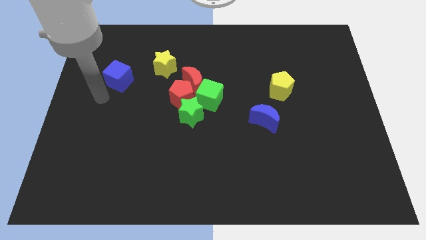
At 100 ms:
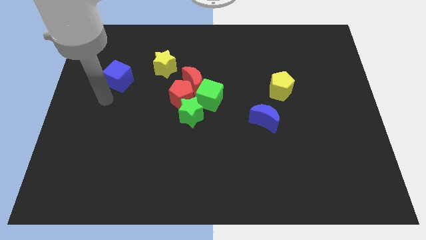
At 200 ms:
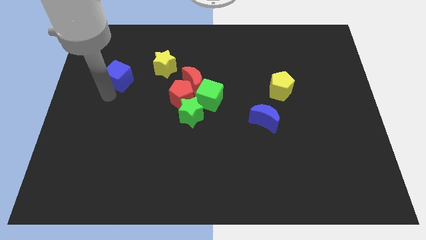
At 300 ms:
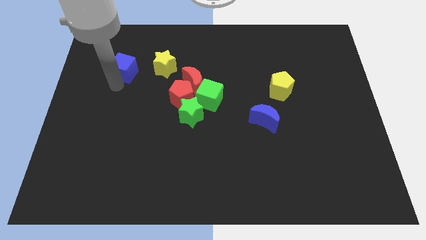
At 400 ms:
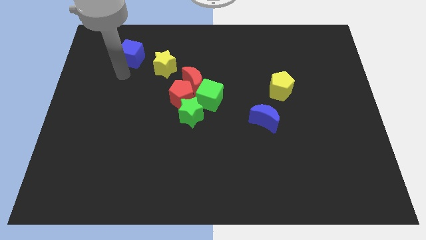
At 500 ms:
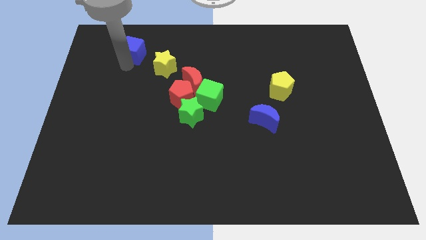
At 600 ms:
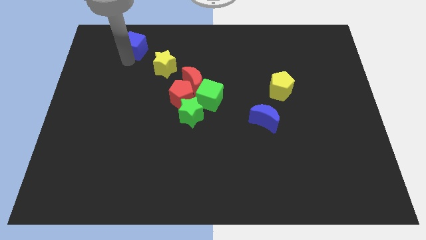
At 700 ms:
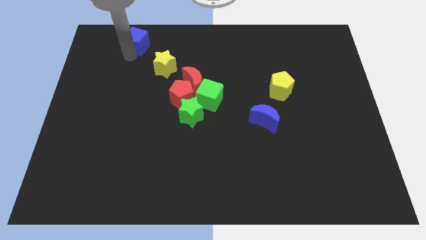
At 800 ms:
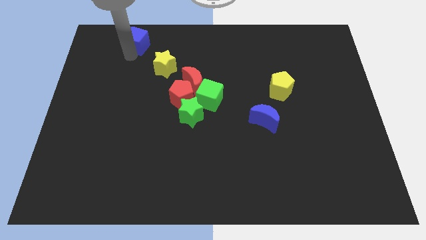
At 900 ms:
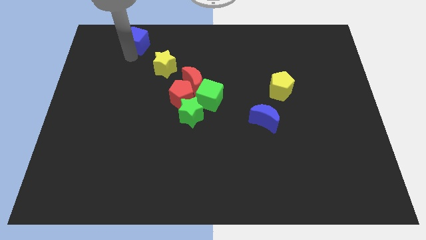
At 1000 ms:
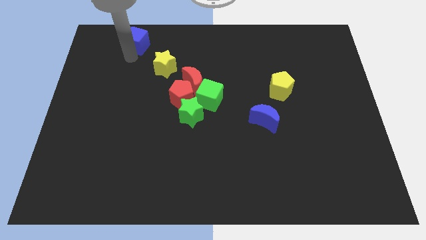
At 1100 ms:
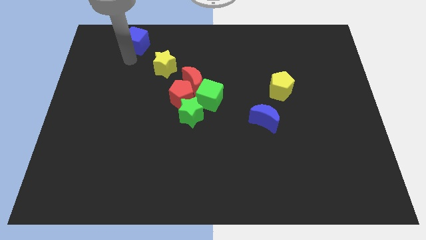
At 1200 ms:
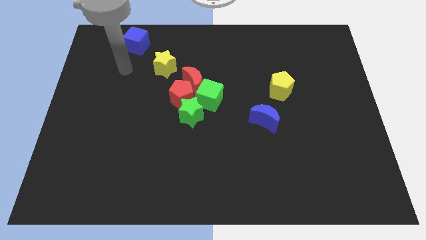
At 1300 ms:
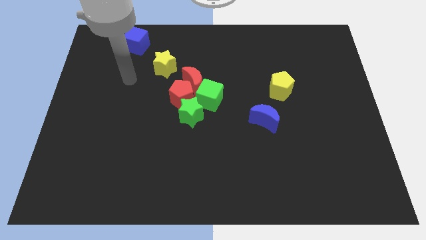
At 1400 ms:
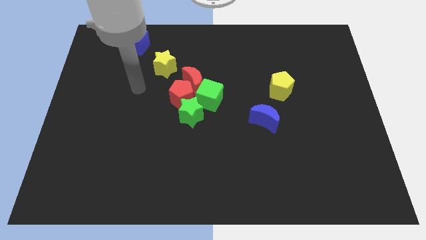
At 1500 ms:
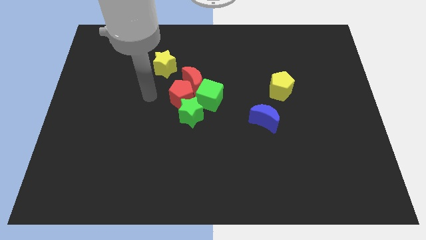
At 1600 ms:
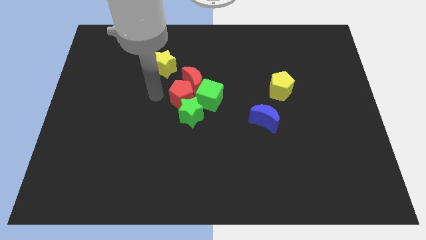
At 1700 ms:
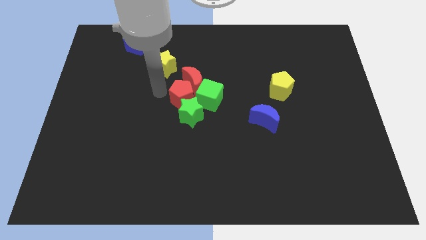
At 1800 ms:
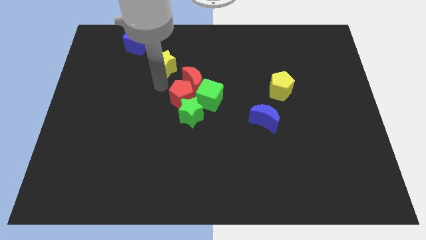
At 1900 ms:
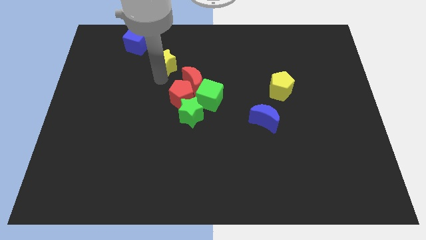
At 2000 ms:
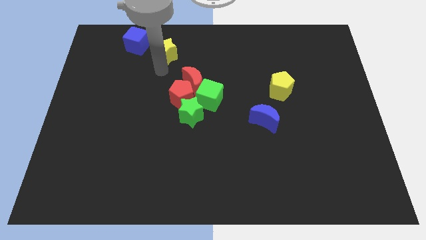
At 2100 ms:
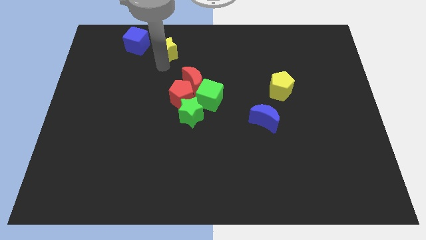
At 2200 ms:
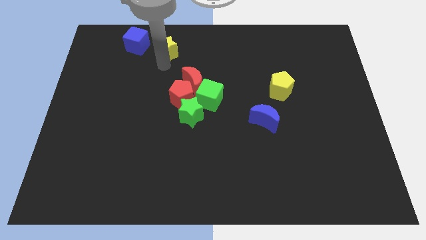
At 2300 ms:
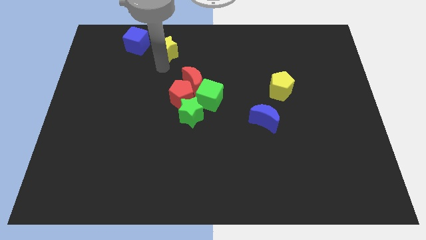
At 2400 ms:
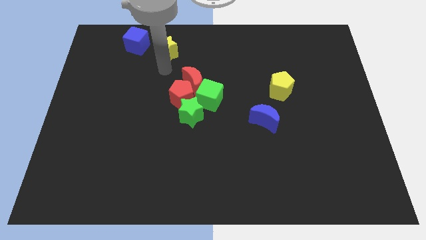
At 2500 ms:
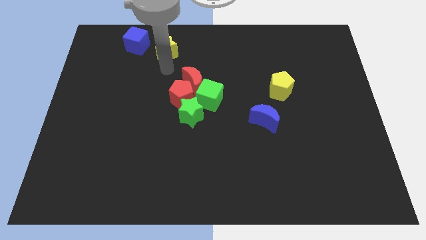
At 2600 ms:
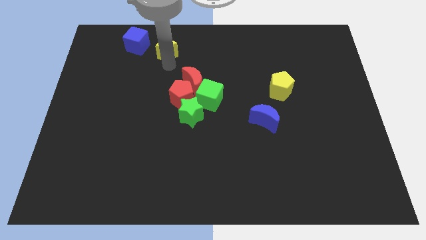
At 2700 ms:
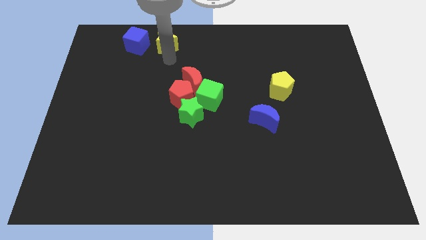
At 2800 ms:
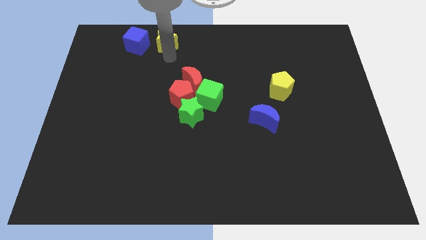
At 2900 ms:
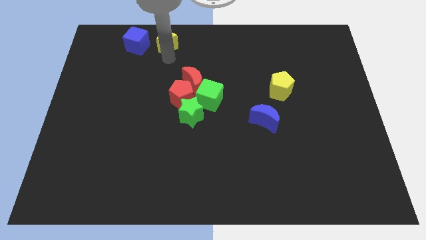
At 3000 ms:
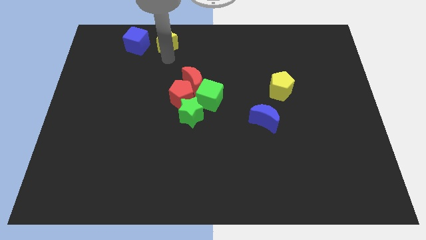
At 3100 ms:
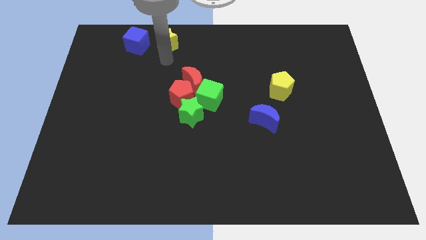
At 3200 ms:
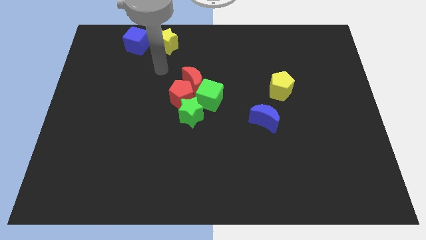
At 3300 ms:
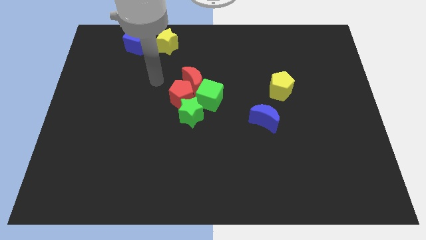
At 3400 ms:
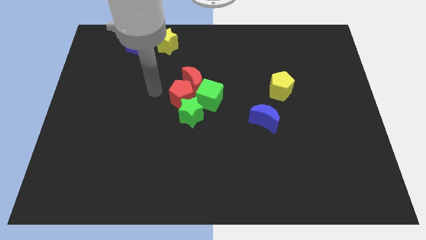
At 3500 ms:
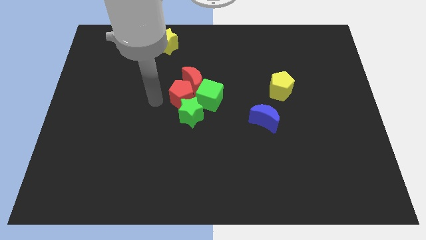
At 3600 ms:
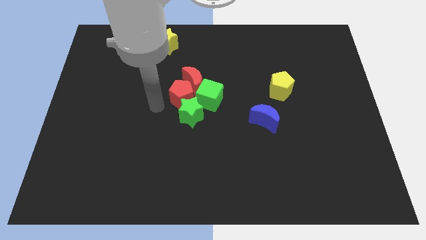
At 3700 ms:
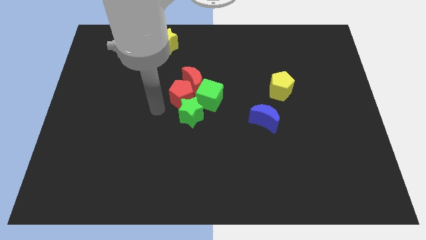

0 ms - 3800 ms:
move the yellow star towards the top

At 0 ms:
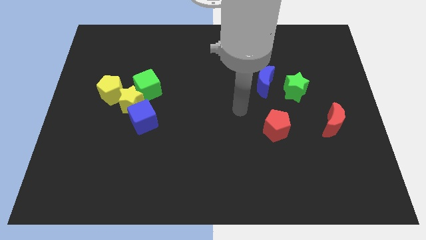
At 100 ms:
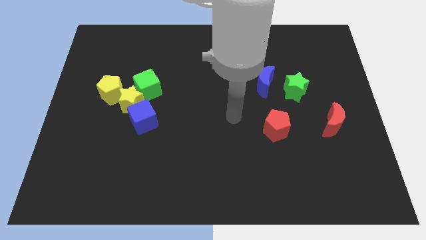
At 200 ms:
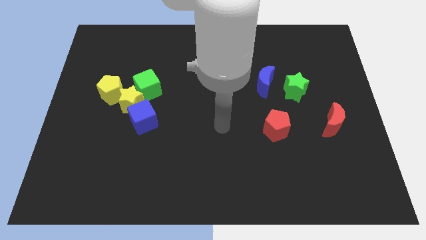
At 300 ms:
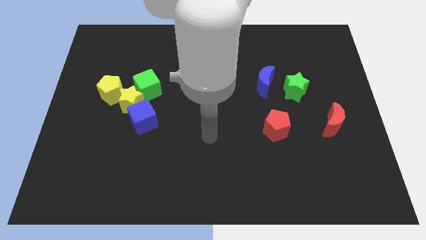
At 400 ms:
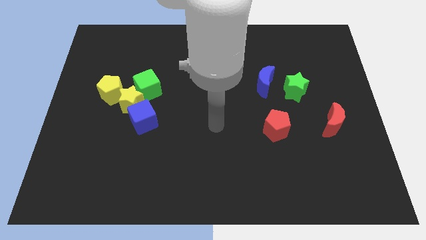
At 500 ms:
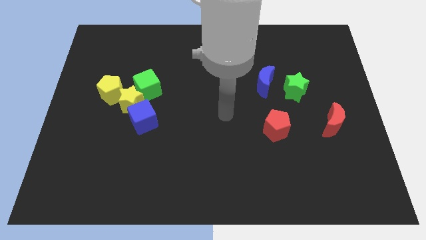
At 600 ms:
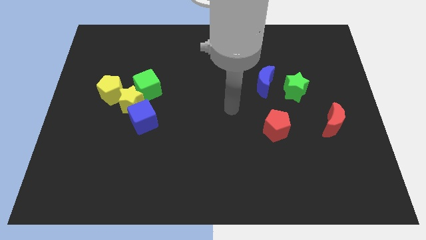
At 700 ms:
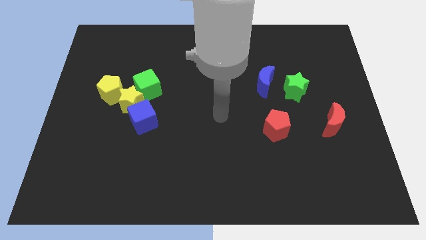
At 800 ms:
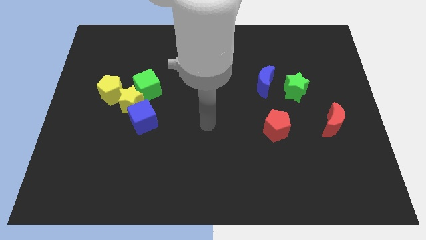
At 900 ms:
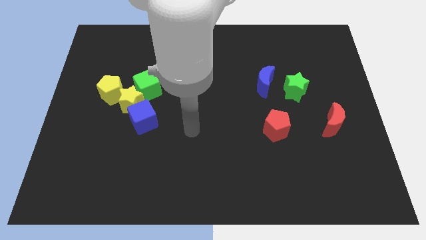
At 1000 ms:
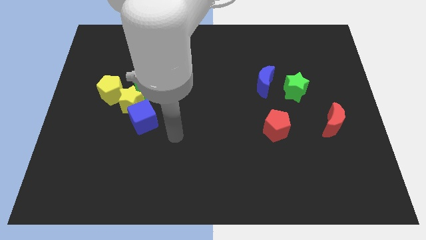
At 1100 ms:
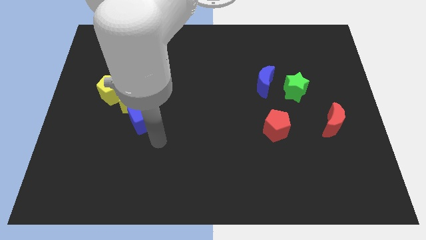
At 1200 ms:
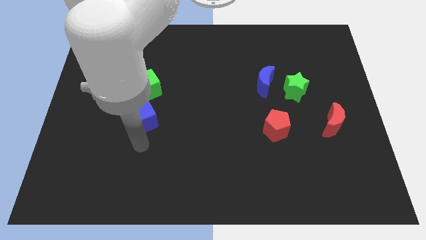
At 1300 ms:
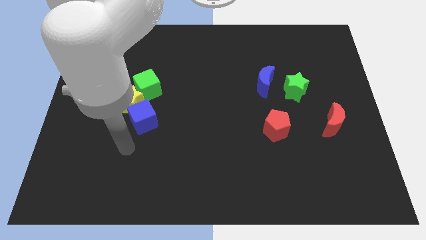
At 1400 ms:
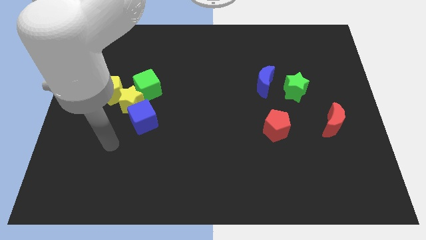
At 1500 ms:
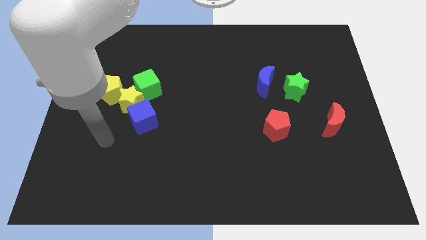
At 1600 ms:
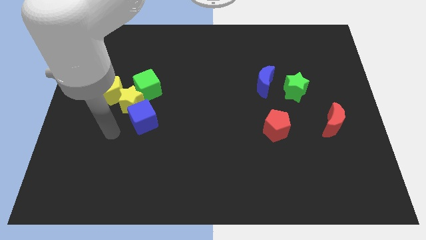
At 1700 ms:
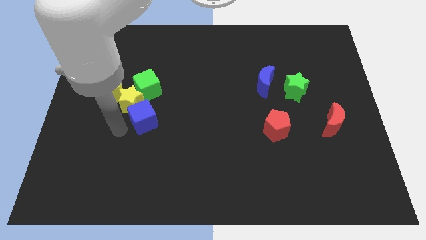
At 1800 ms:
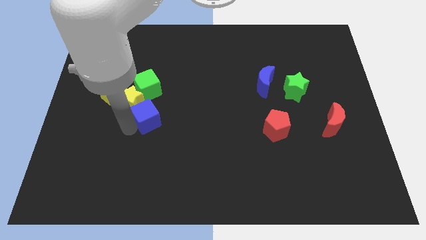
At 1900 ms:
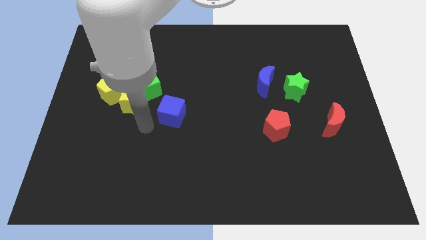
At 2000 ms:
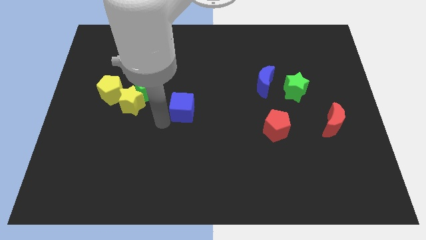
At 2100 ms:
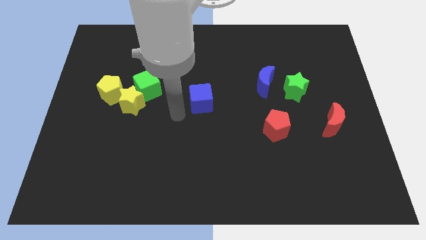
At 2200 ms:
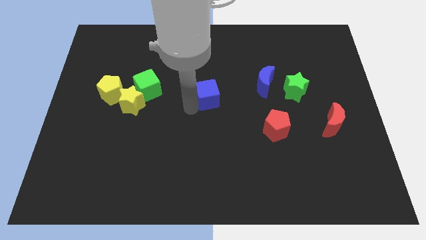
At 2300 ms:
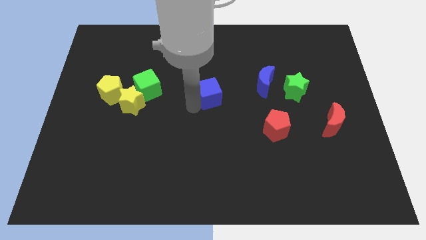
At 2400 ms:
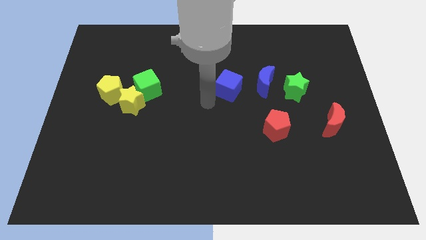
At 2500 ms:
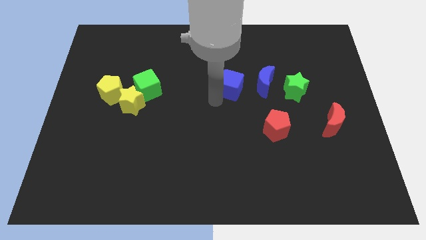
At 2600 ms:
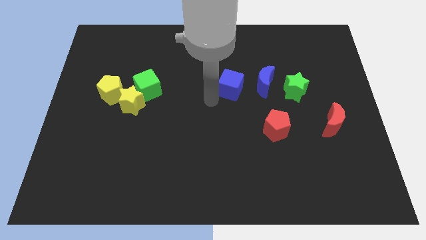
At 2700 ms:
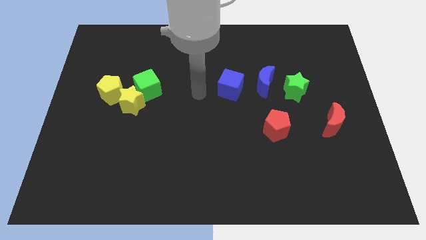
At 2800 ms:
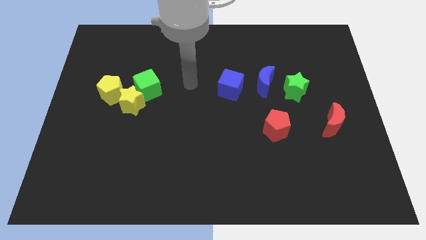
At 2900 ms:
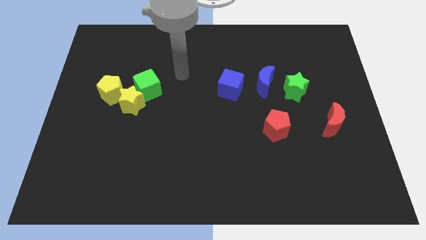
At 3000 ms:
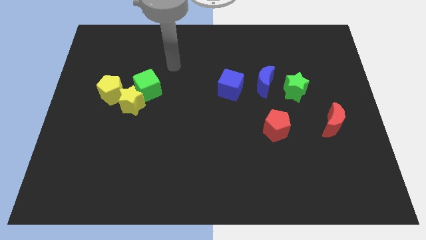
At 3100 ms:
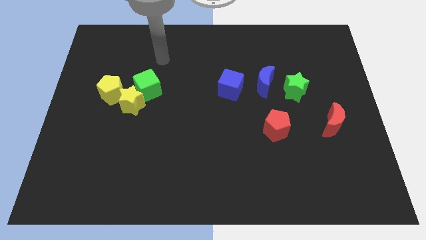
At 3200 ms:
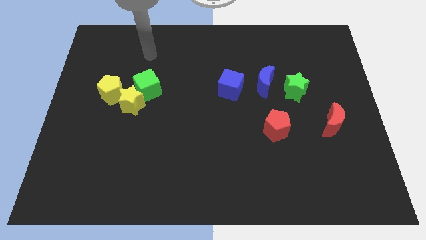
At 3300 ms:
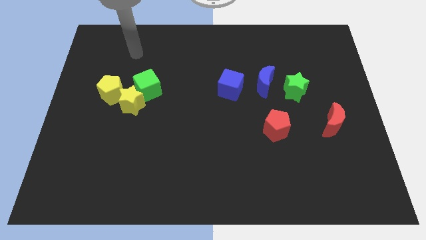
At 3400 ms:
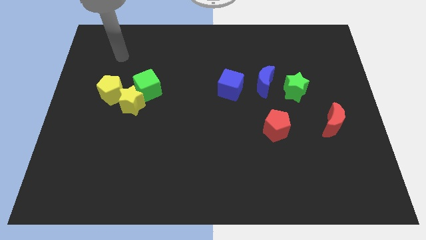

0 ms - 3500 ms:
place the blue cube to the left side of the blue crescent

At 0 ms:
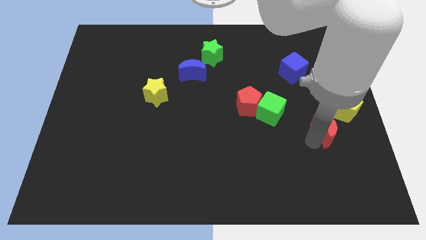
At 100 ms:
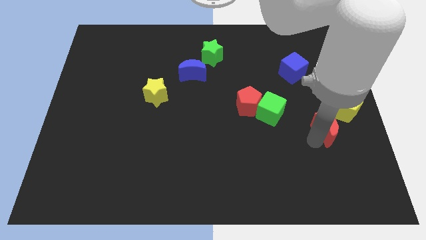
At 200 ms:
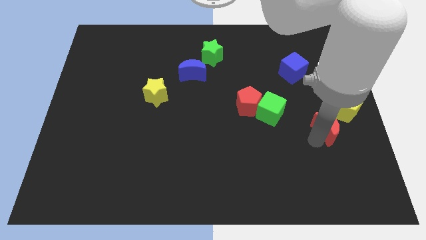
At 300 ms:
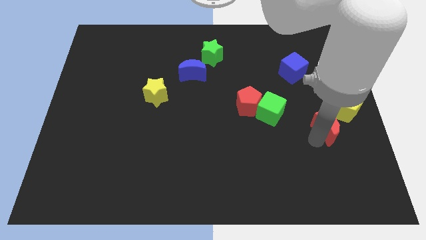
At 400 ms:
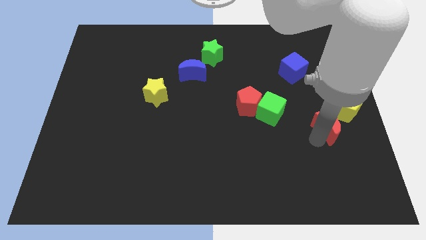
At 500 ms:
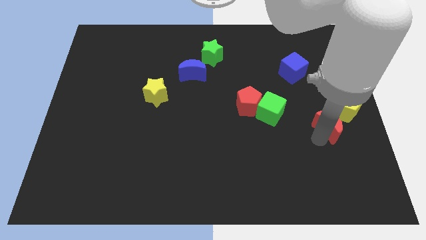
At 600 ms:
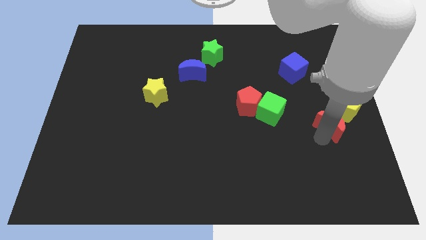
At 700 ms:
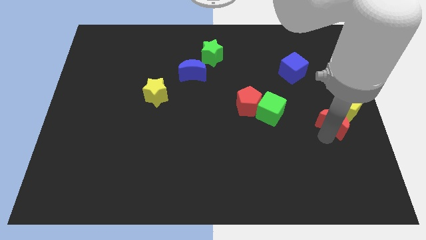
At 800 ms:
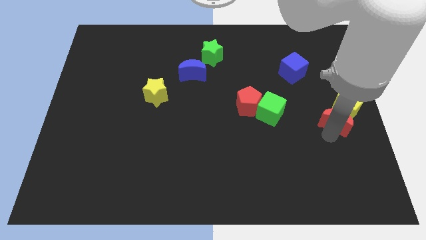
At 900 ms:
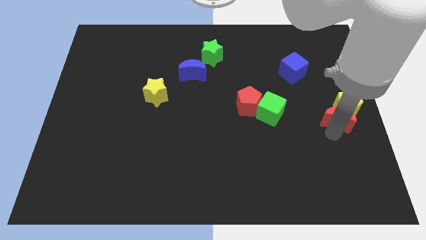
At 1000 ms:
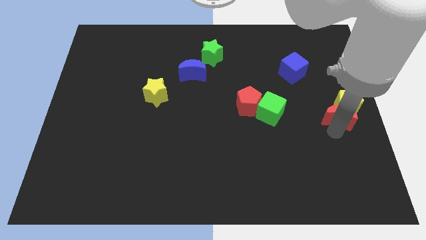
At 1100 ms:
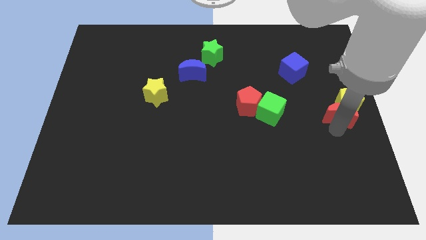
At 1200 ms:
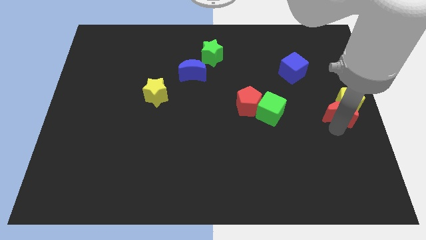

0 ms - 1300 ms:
push the red crescent into the yellow pentagon

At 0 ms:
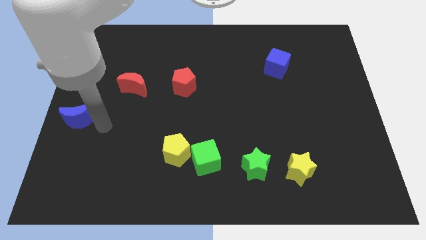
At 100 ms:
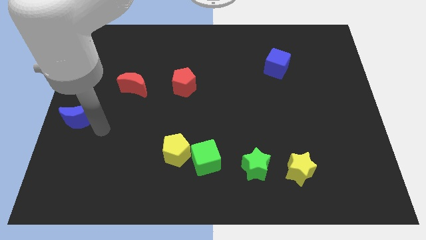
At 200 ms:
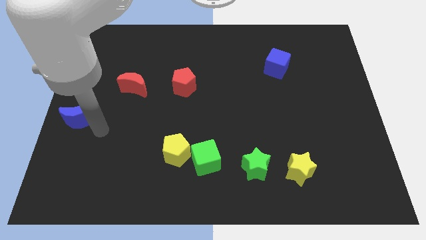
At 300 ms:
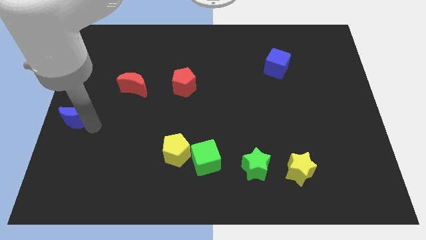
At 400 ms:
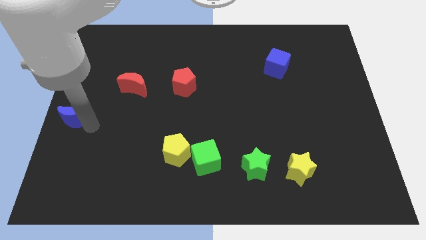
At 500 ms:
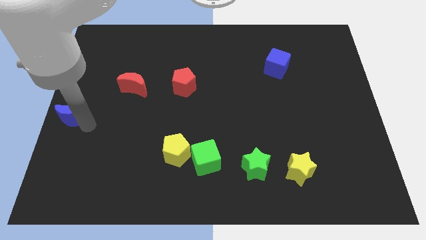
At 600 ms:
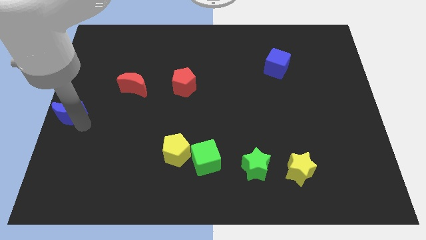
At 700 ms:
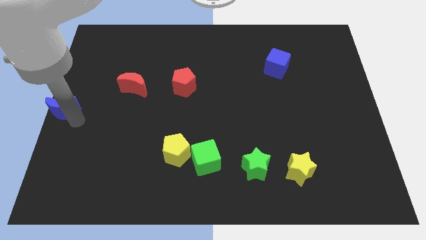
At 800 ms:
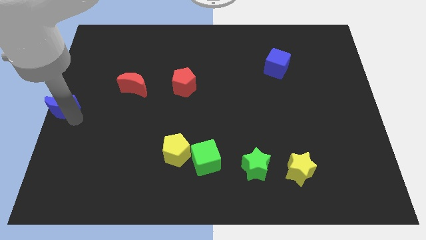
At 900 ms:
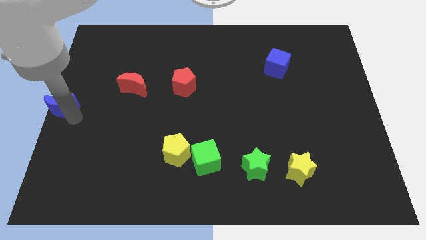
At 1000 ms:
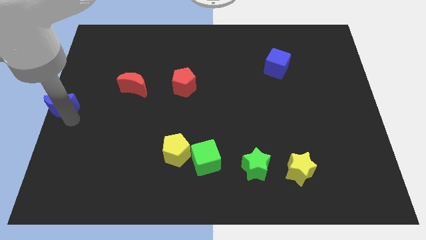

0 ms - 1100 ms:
place the blue moon at the center left of the board
